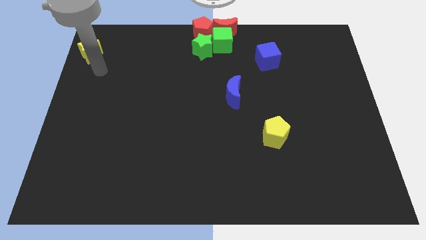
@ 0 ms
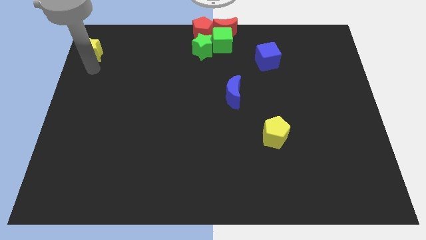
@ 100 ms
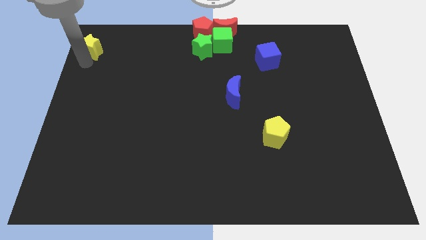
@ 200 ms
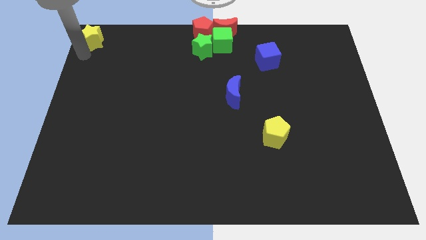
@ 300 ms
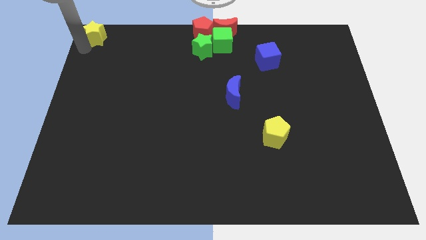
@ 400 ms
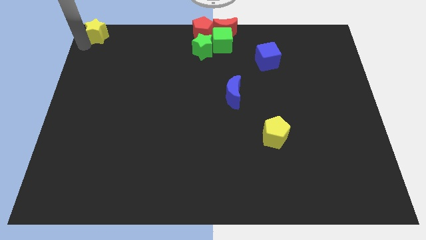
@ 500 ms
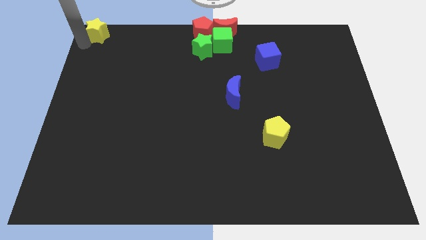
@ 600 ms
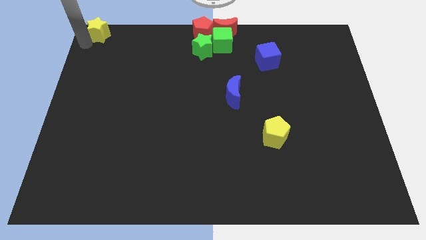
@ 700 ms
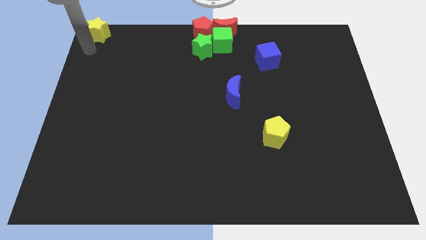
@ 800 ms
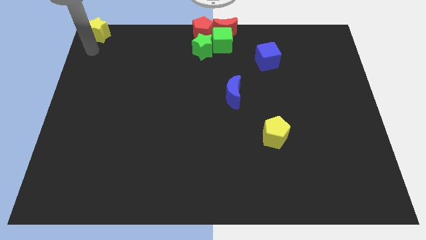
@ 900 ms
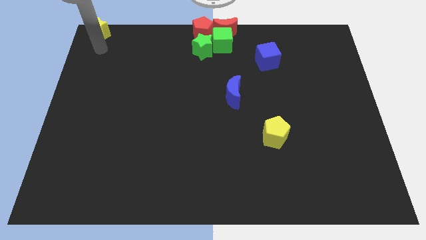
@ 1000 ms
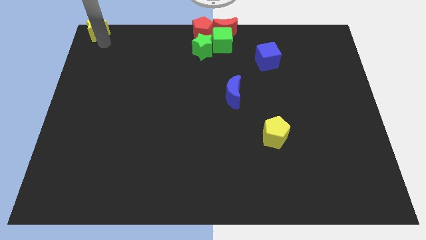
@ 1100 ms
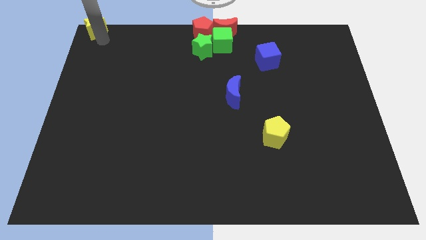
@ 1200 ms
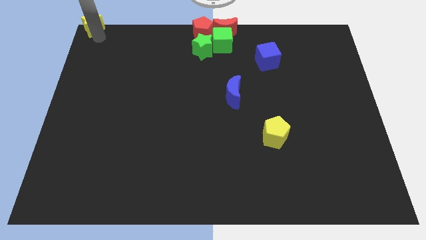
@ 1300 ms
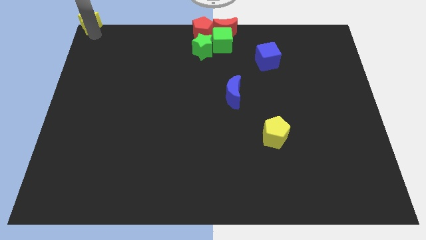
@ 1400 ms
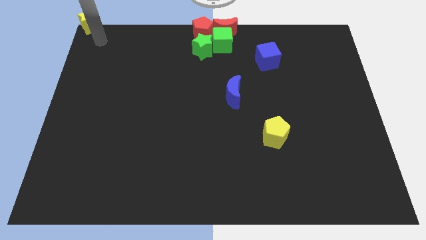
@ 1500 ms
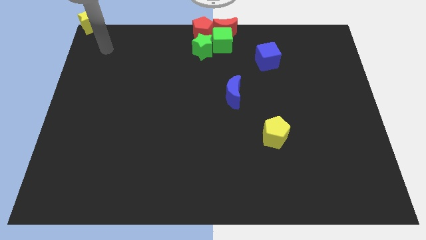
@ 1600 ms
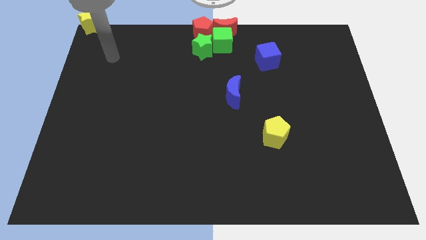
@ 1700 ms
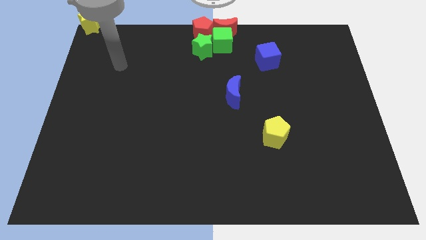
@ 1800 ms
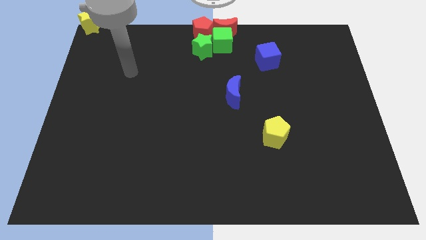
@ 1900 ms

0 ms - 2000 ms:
move yellow star towards the top left corner of the board

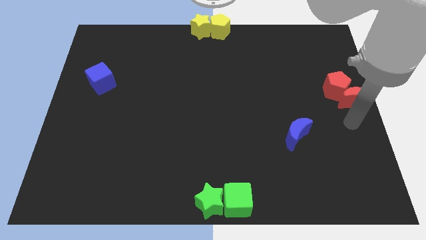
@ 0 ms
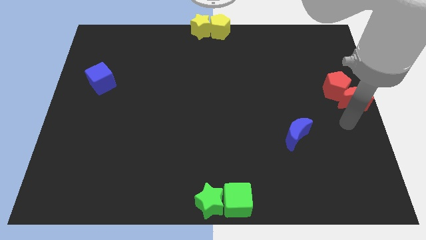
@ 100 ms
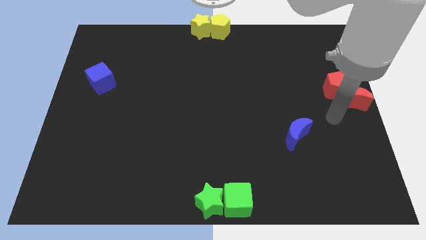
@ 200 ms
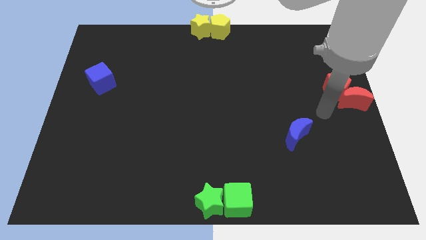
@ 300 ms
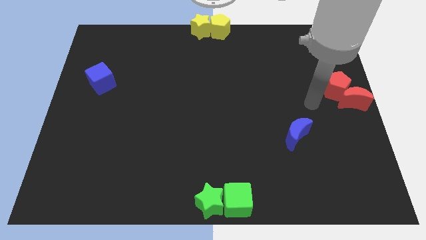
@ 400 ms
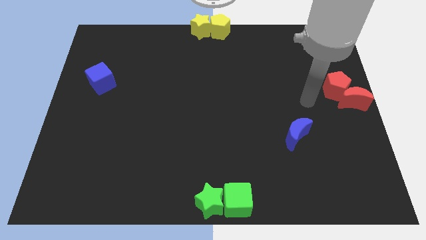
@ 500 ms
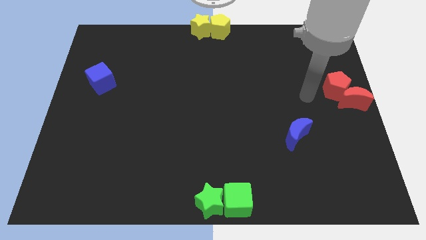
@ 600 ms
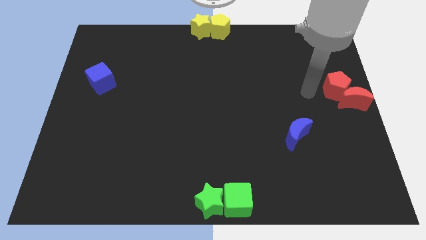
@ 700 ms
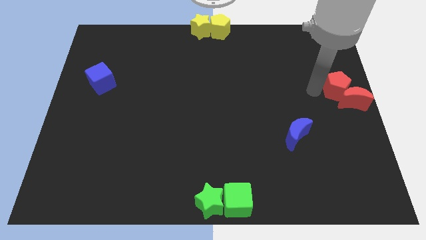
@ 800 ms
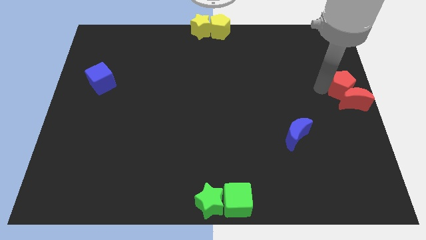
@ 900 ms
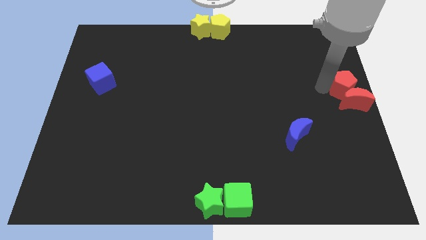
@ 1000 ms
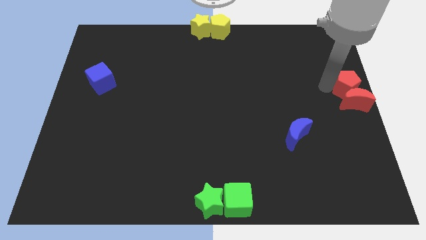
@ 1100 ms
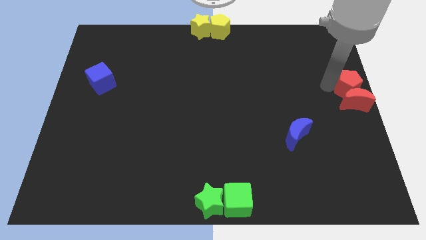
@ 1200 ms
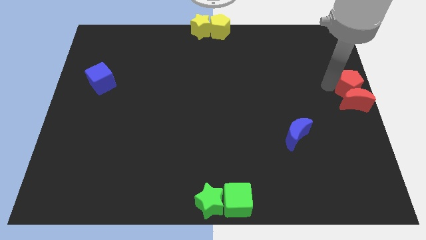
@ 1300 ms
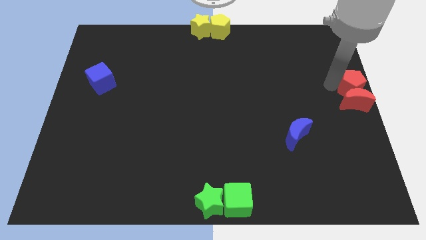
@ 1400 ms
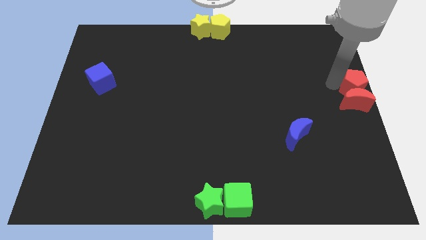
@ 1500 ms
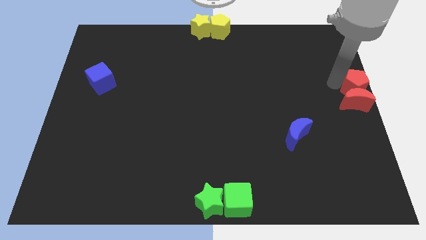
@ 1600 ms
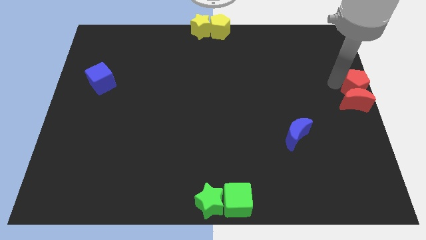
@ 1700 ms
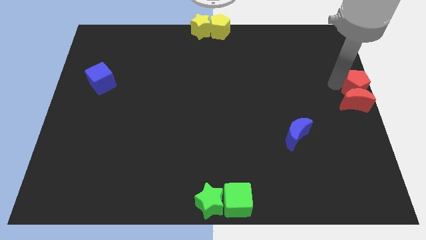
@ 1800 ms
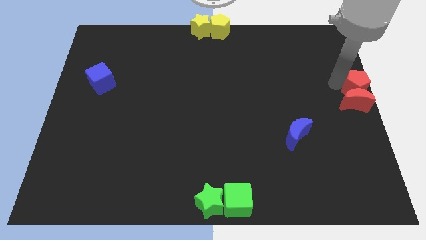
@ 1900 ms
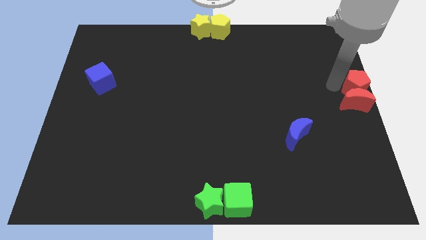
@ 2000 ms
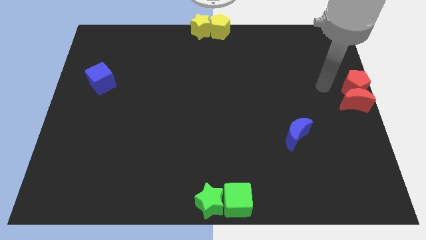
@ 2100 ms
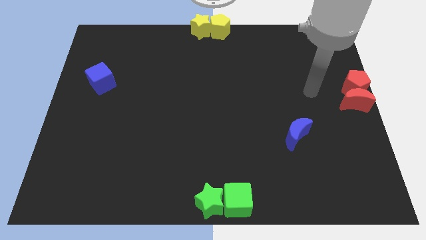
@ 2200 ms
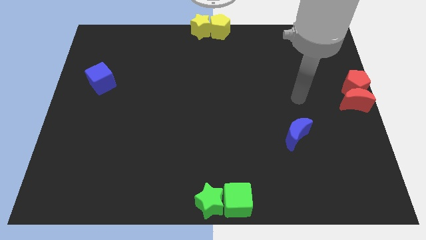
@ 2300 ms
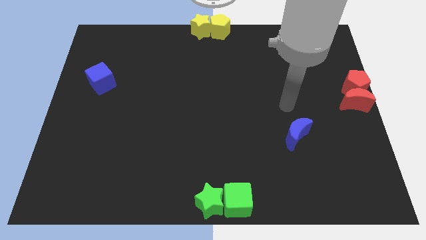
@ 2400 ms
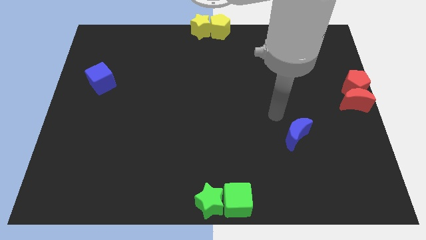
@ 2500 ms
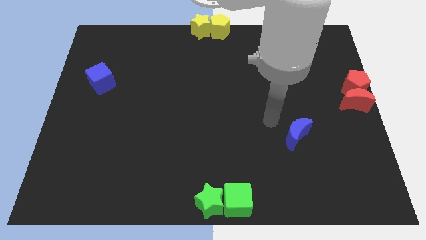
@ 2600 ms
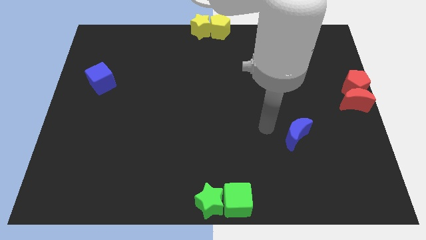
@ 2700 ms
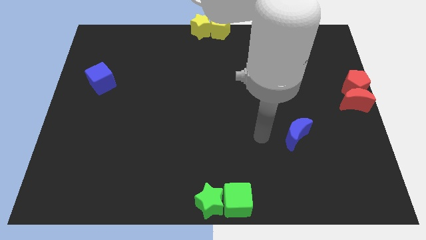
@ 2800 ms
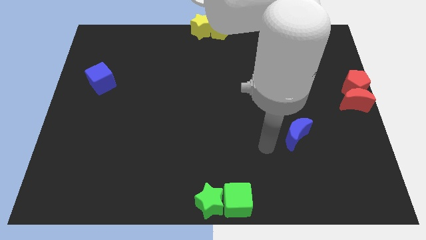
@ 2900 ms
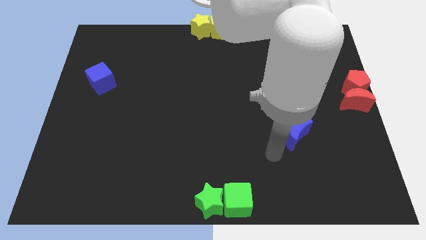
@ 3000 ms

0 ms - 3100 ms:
slide the red blocks to the center right

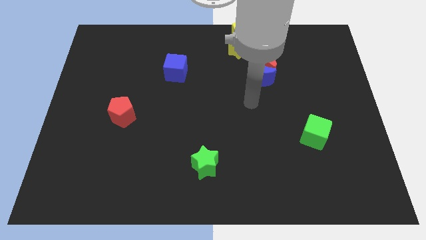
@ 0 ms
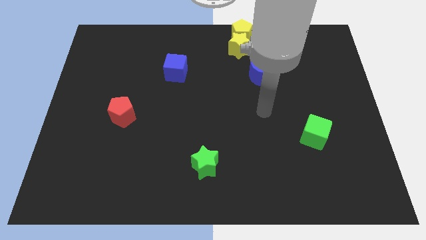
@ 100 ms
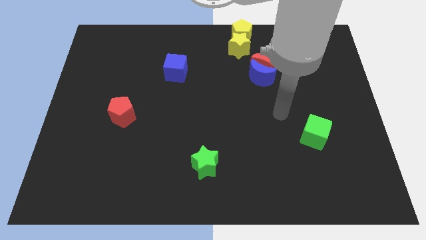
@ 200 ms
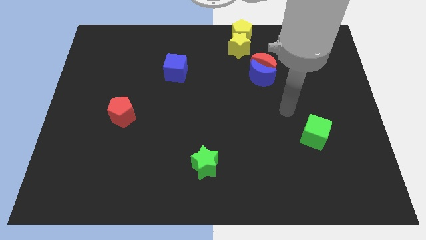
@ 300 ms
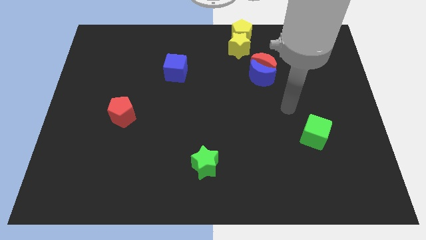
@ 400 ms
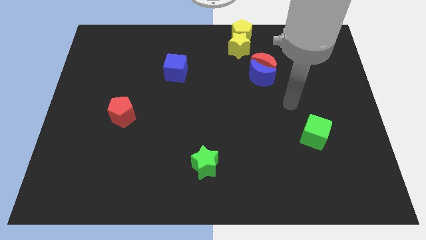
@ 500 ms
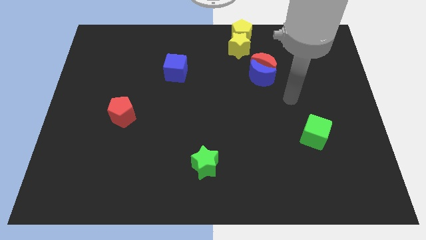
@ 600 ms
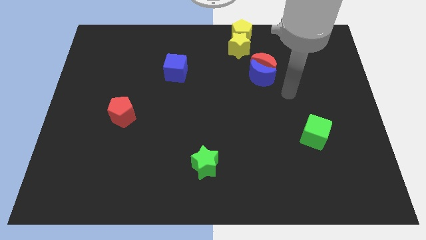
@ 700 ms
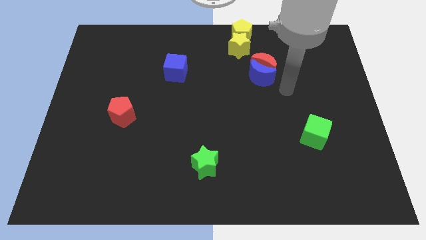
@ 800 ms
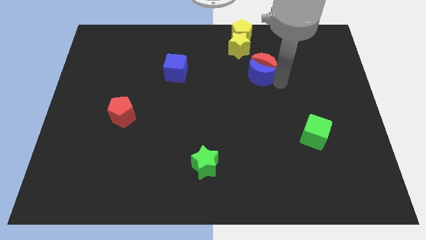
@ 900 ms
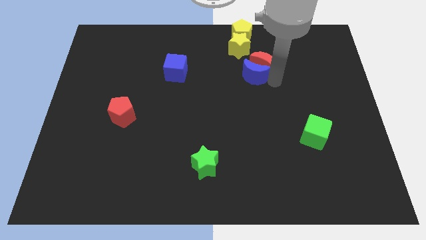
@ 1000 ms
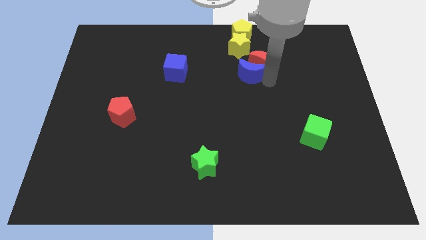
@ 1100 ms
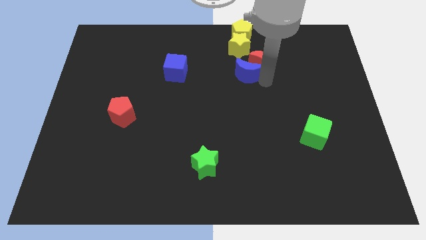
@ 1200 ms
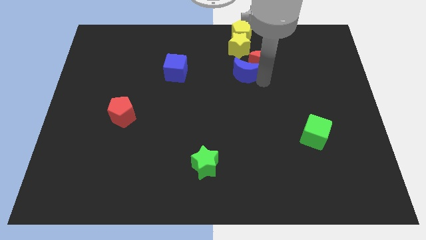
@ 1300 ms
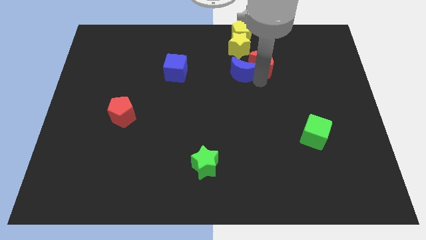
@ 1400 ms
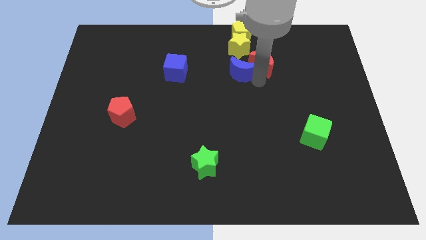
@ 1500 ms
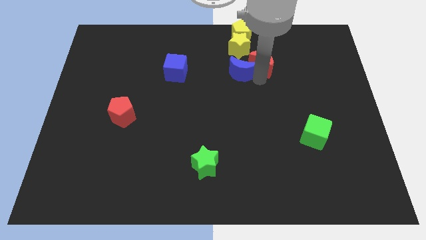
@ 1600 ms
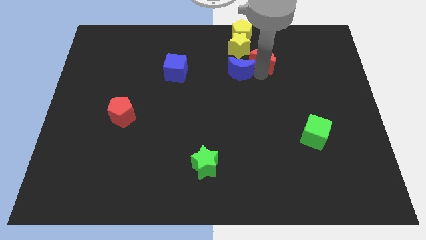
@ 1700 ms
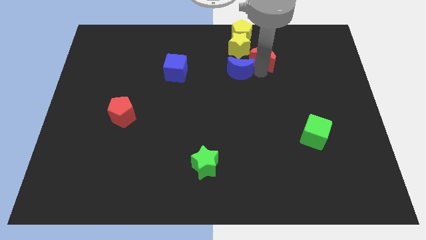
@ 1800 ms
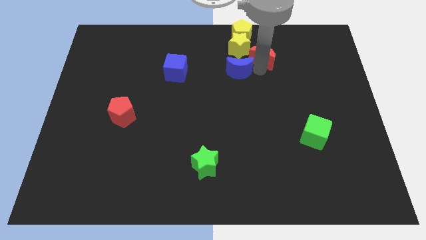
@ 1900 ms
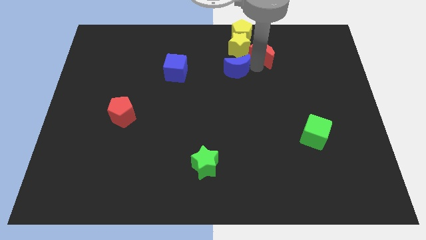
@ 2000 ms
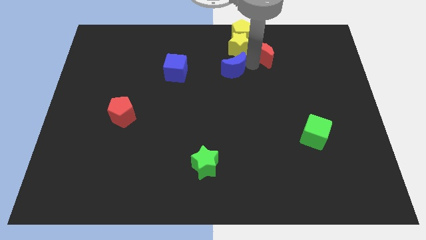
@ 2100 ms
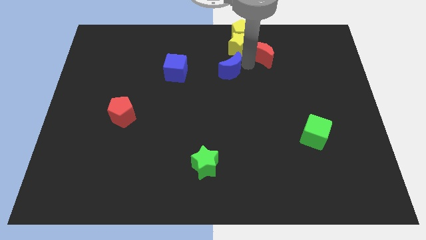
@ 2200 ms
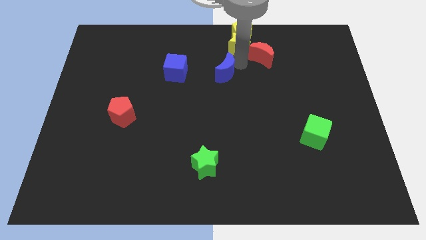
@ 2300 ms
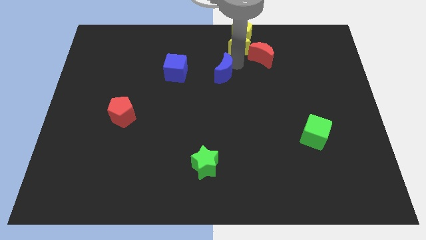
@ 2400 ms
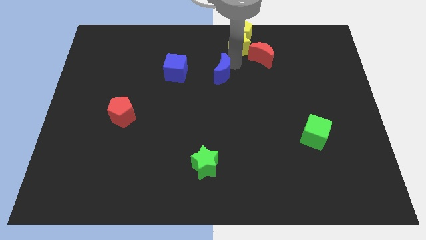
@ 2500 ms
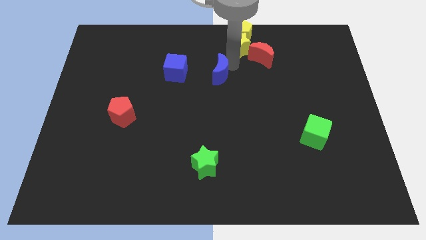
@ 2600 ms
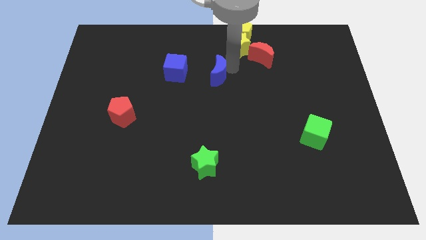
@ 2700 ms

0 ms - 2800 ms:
separate the blue crescent from the red crescent

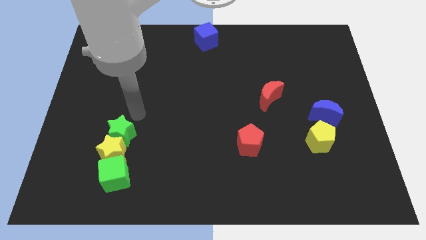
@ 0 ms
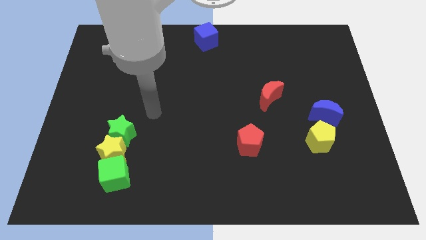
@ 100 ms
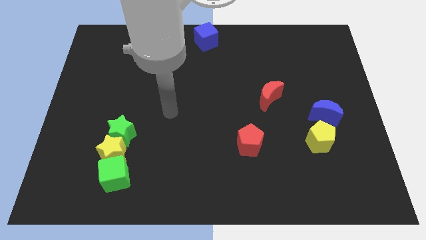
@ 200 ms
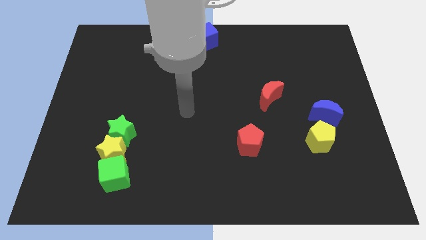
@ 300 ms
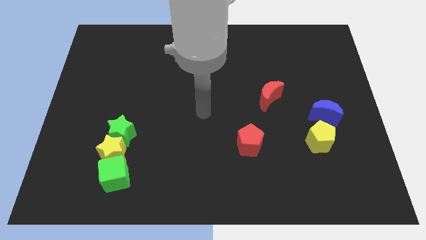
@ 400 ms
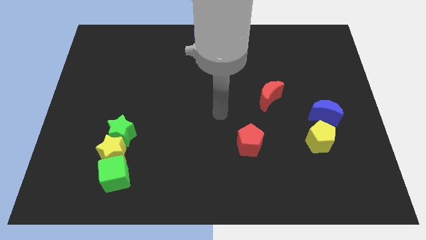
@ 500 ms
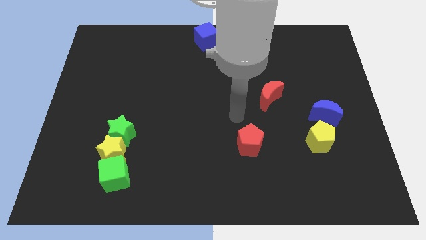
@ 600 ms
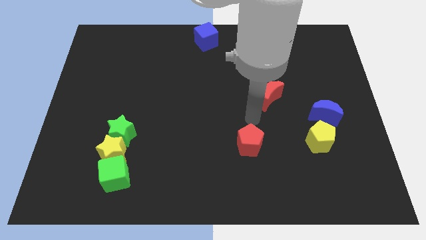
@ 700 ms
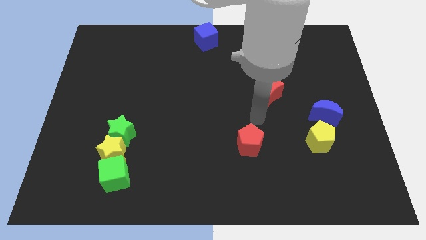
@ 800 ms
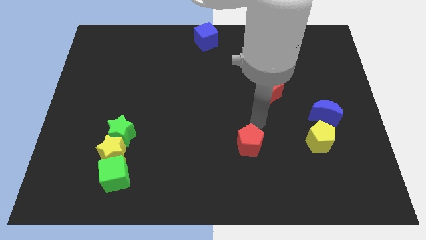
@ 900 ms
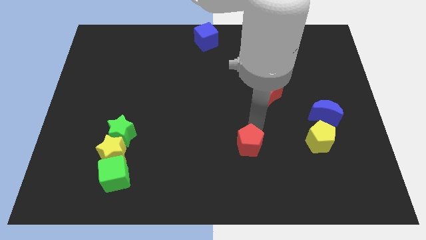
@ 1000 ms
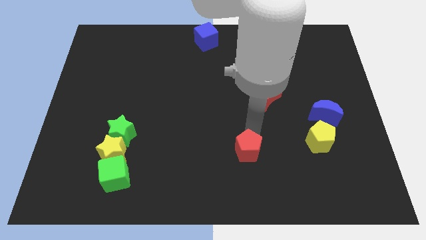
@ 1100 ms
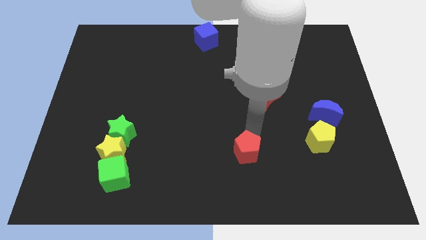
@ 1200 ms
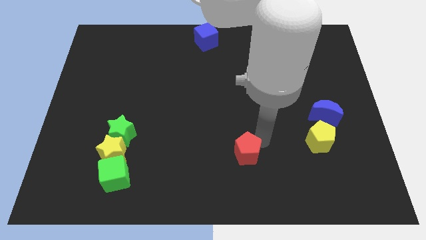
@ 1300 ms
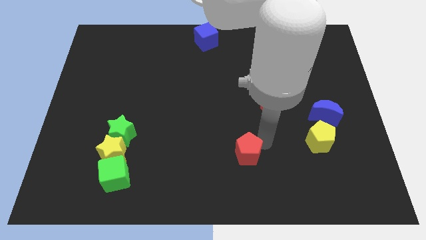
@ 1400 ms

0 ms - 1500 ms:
push the red pentagon slightly towards bottom
